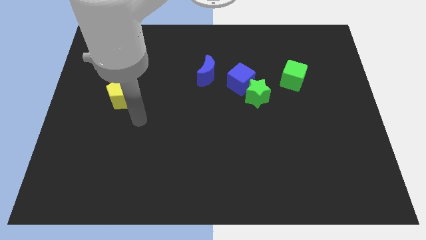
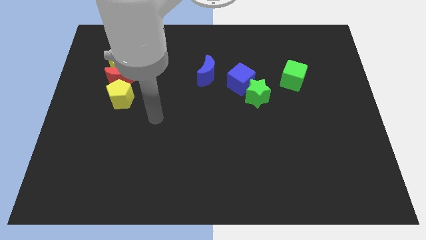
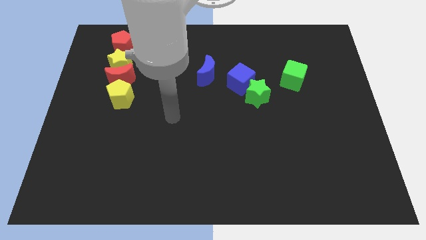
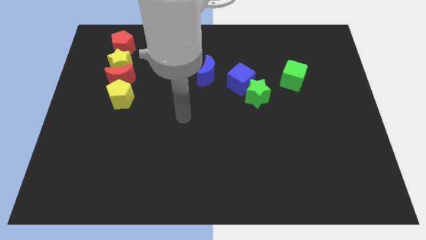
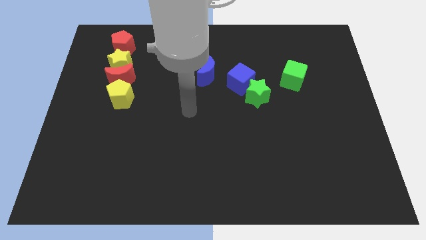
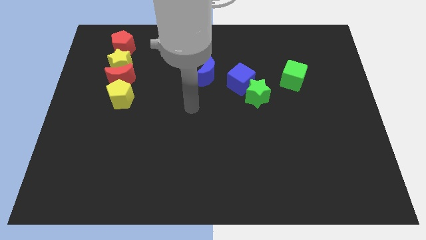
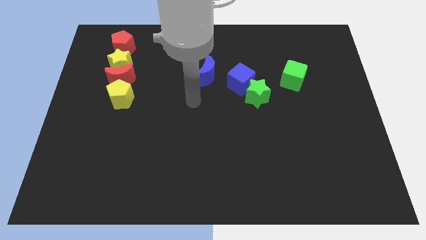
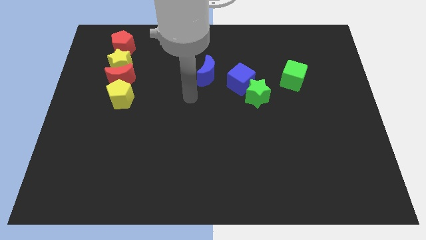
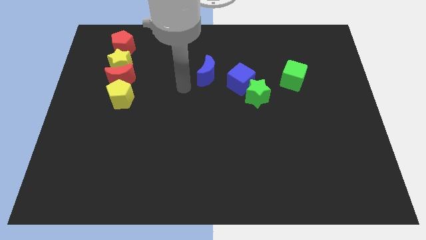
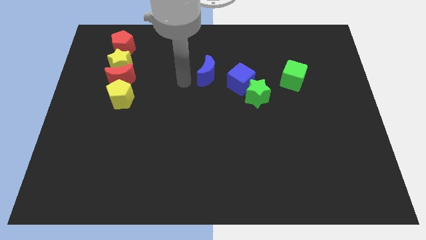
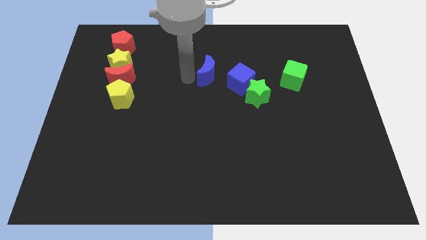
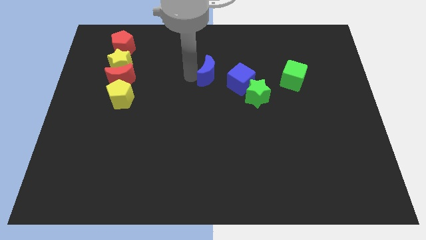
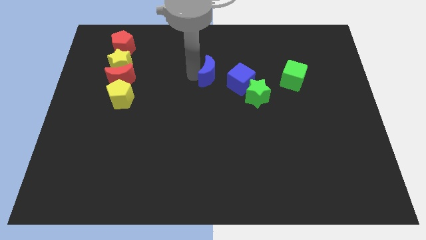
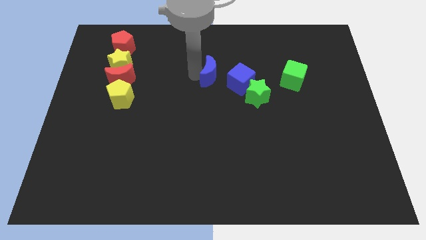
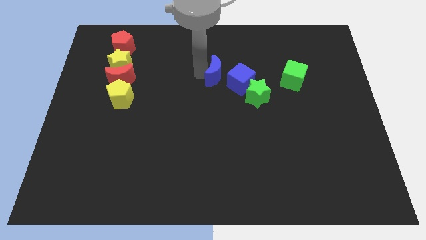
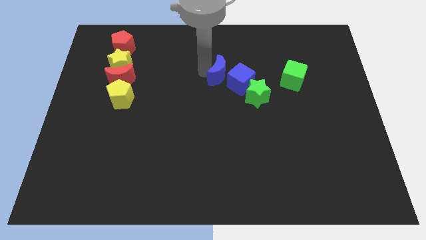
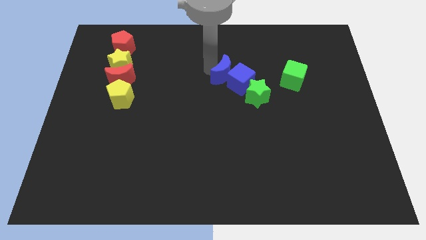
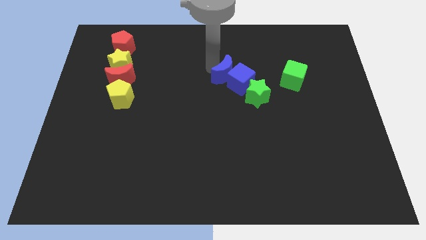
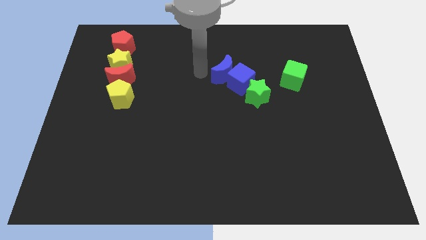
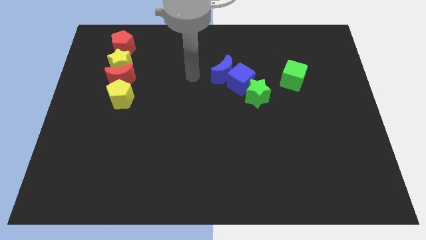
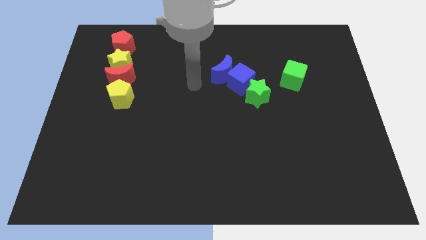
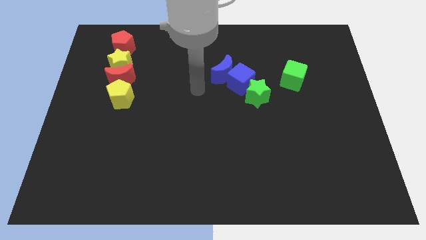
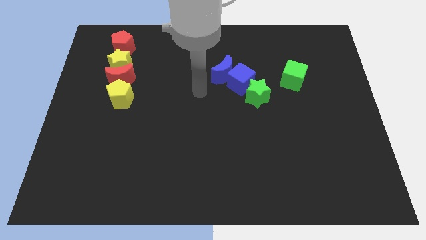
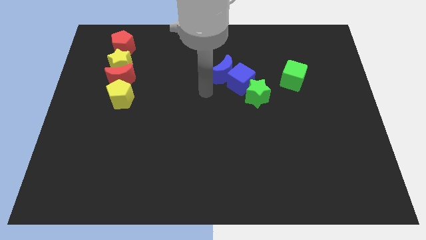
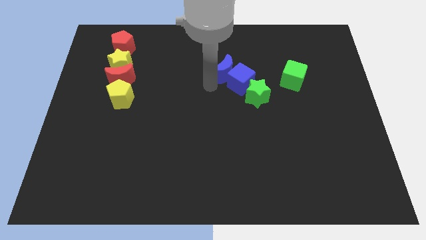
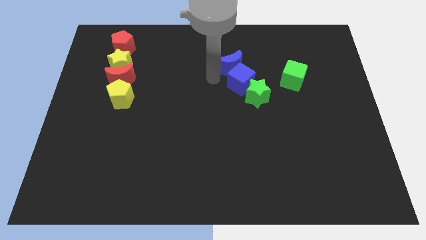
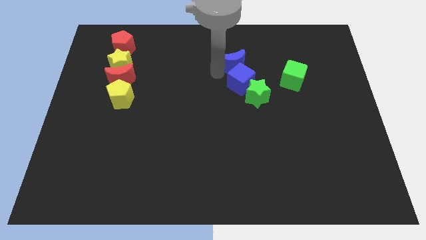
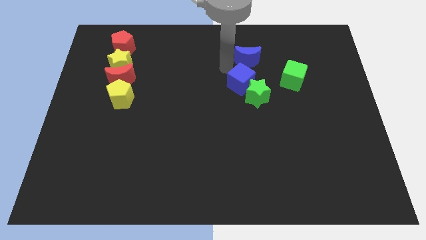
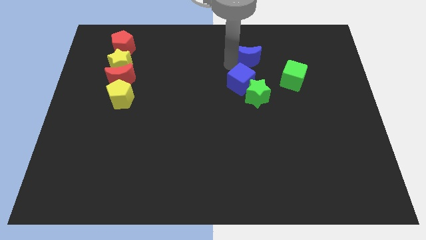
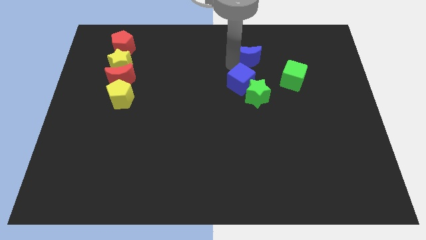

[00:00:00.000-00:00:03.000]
move the blue crescent above the blue cube

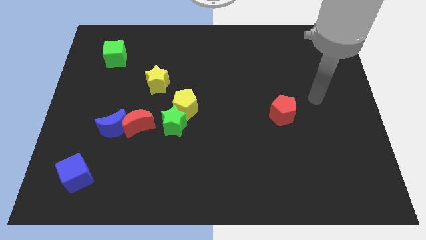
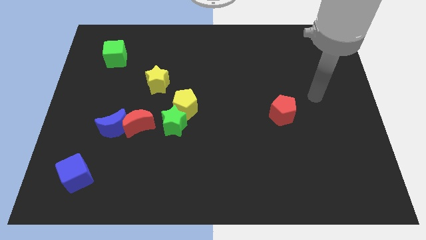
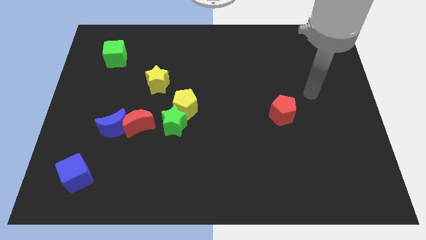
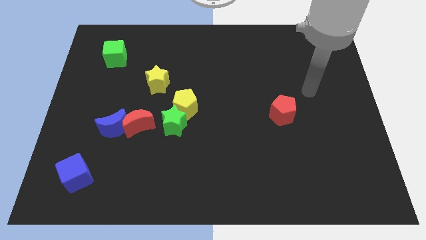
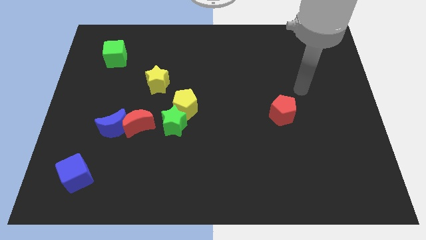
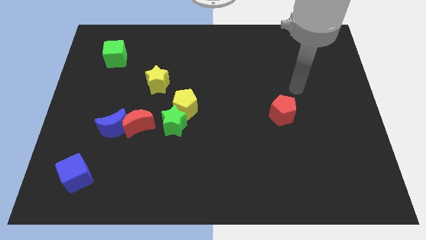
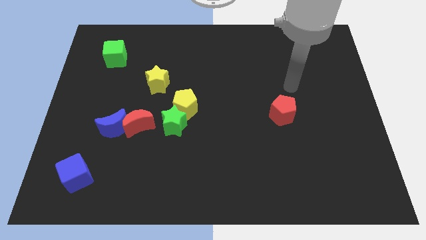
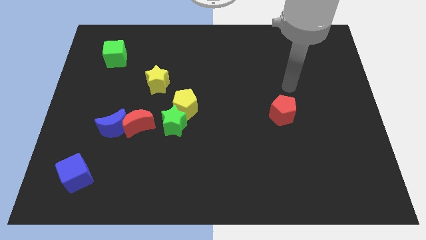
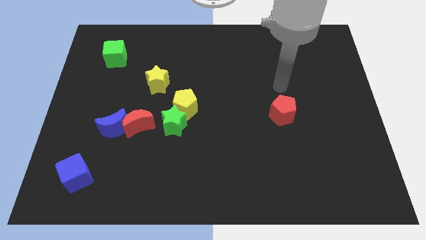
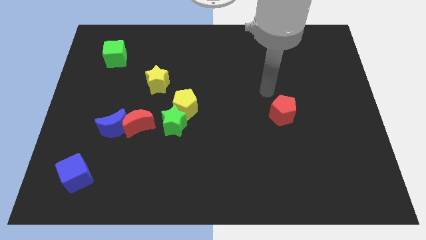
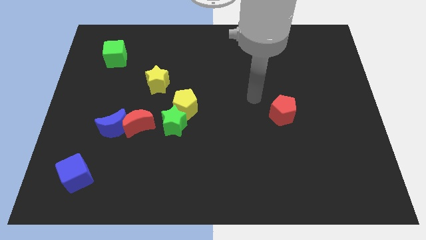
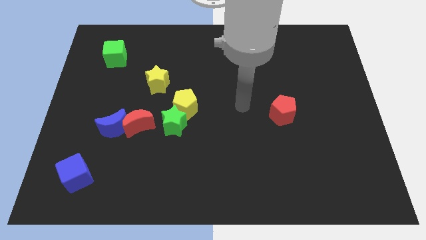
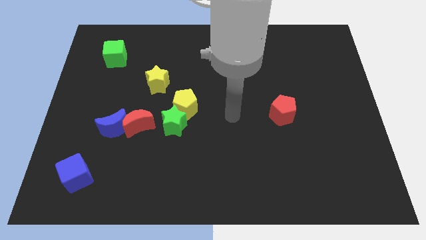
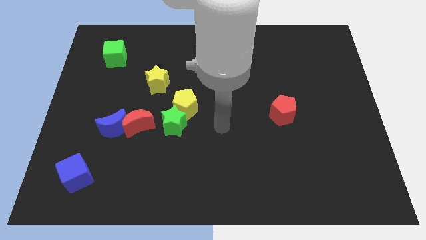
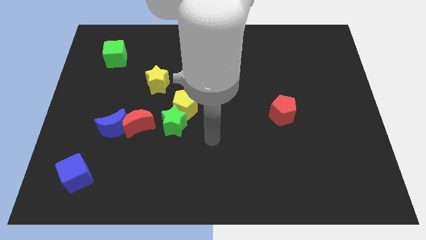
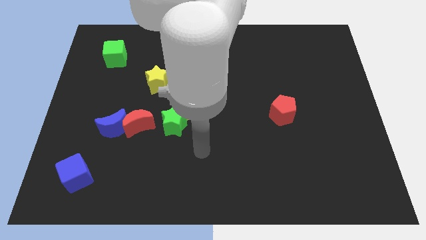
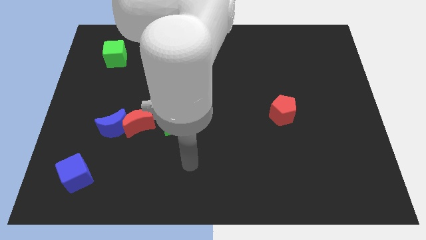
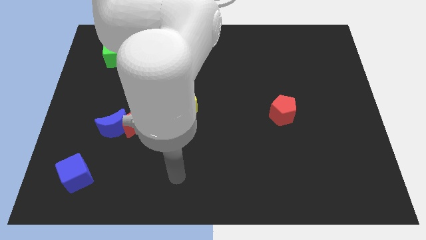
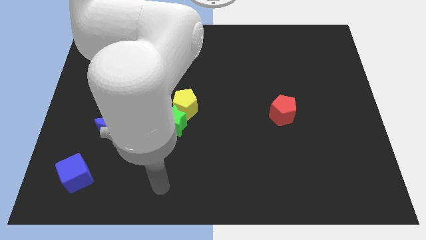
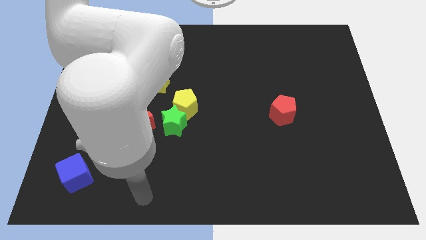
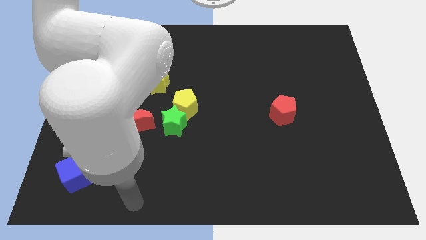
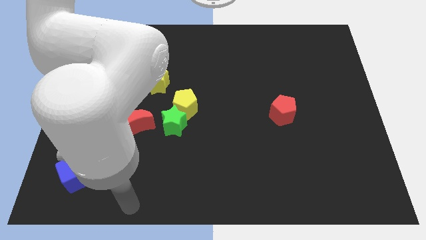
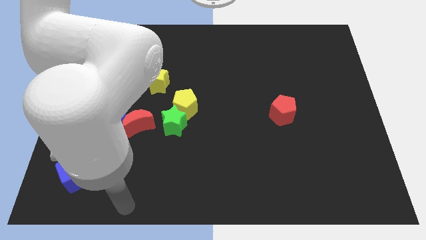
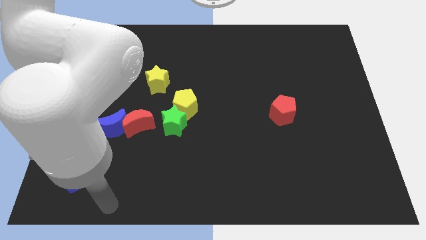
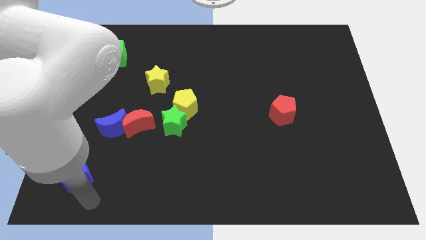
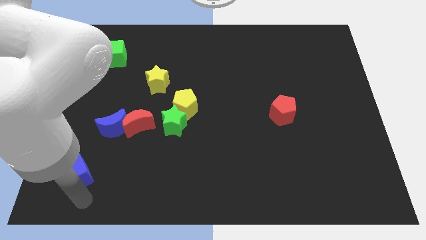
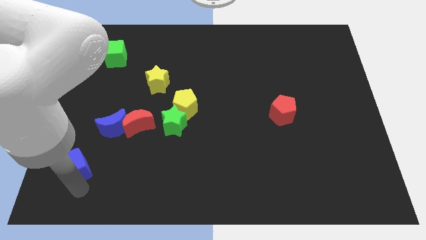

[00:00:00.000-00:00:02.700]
move your arm close to the blue cube

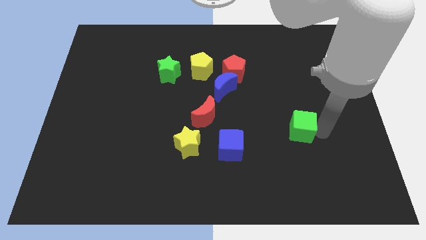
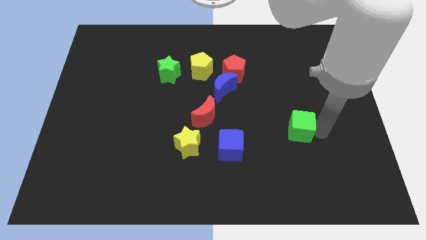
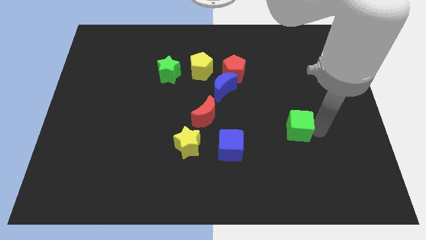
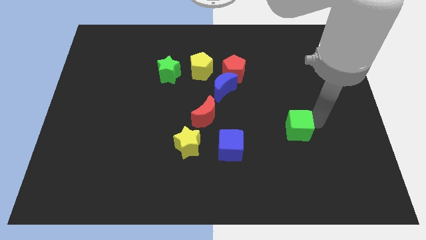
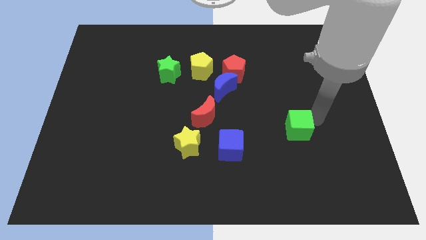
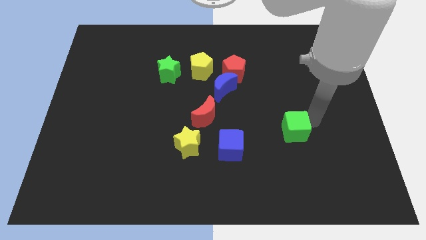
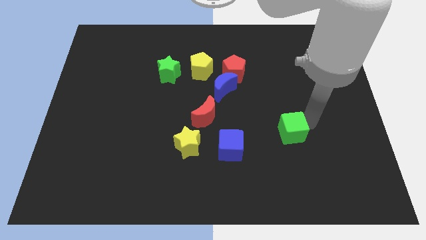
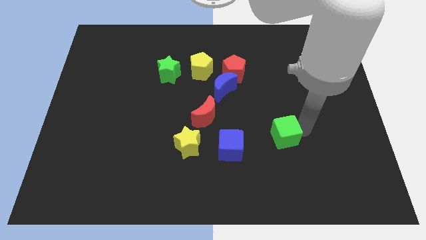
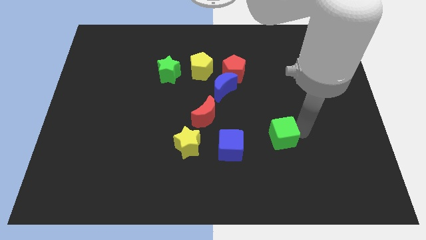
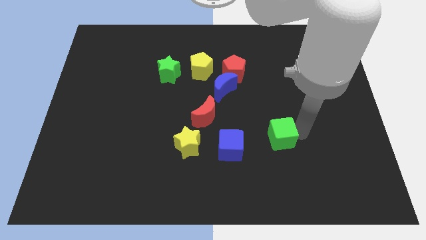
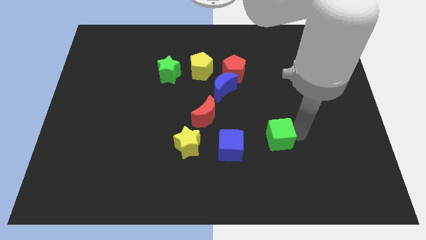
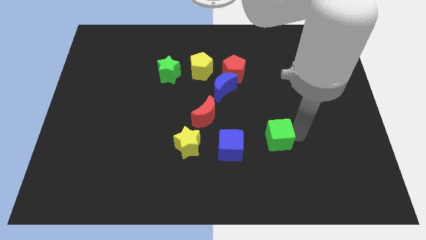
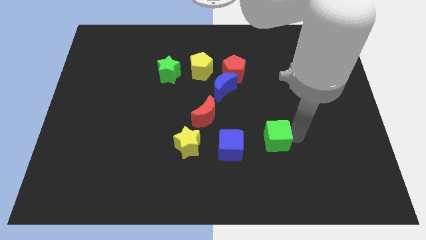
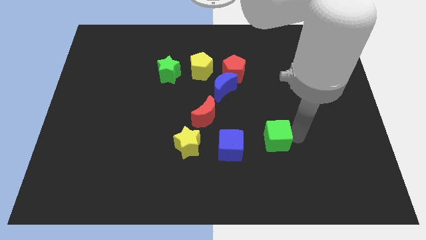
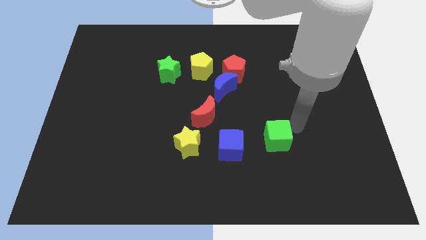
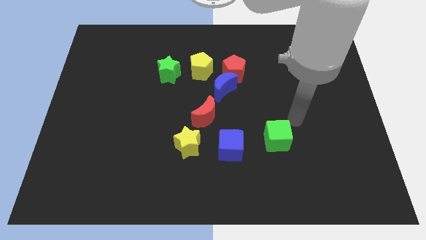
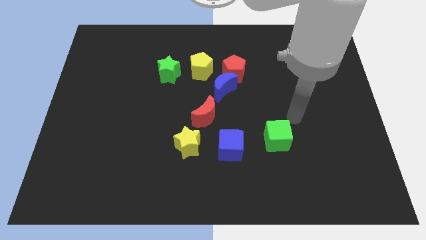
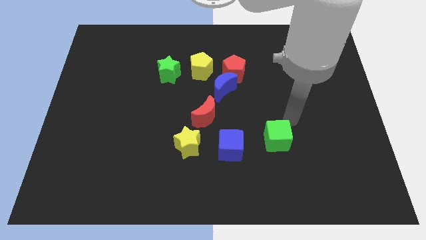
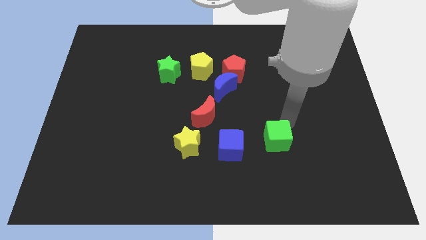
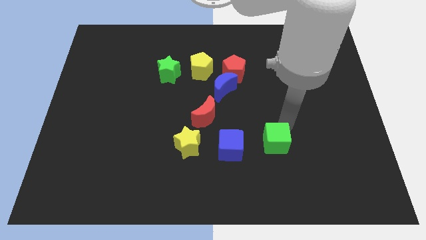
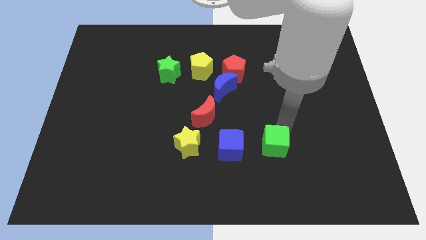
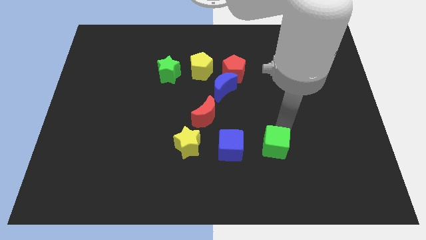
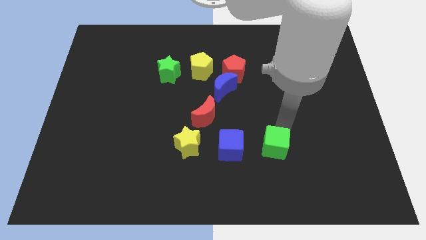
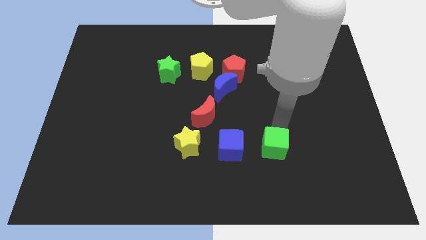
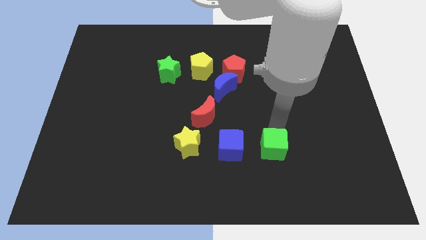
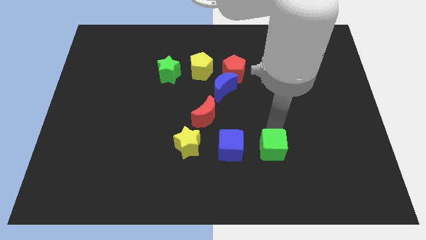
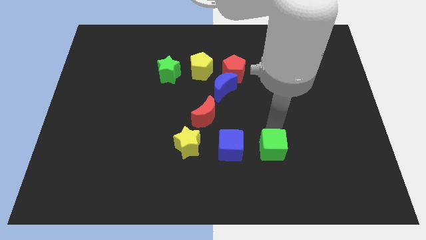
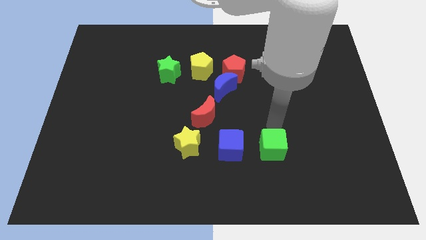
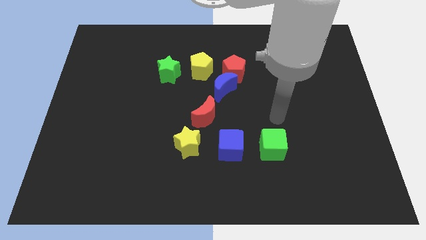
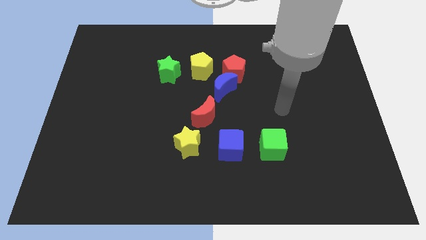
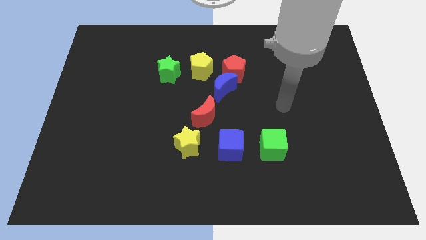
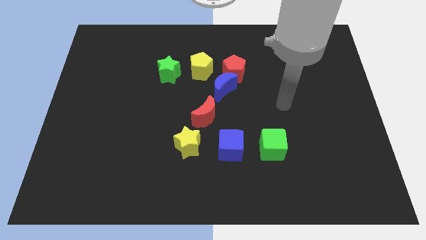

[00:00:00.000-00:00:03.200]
move the green cube to the right of blue cube

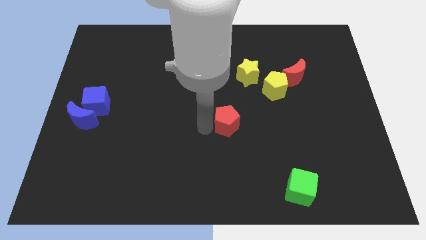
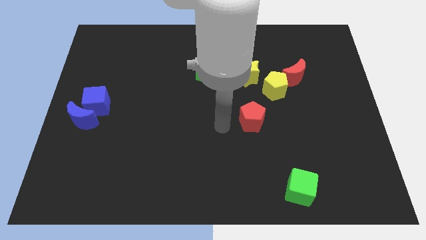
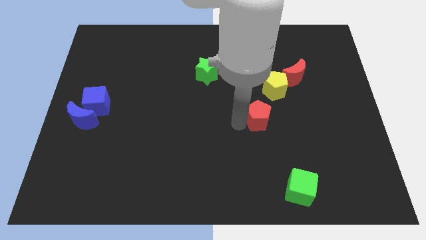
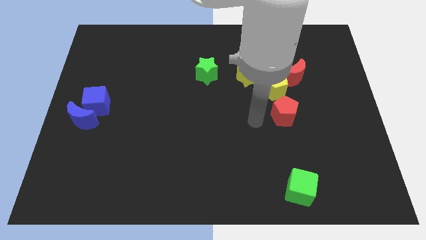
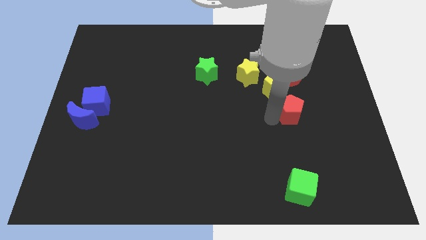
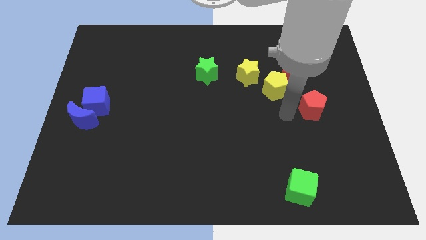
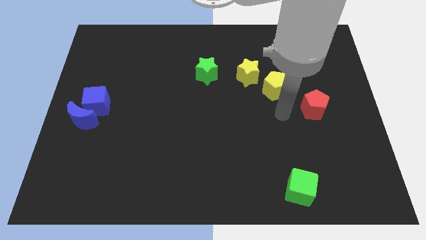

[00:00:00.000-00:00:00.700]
place the red pentagon parallel to the right center of the board
